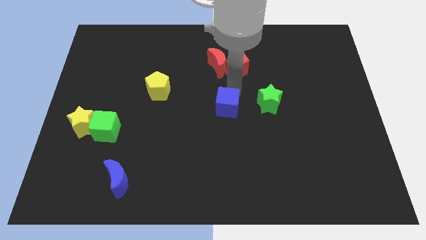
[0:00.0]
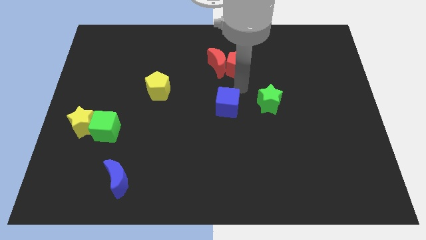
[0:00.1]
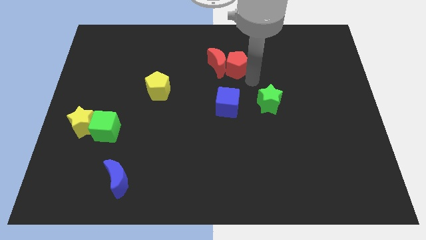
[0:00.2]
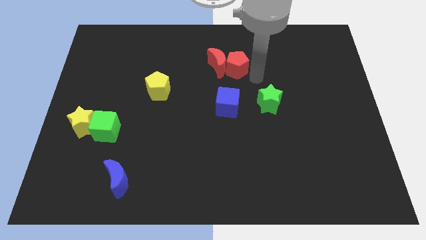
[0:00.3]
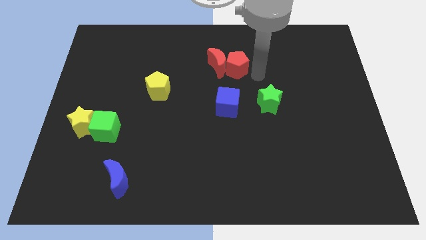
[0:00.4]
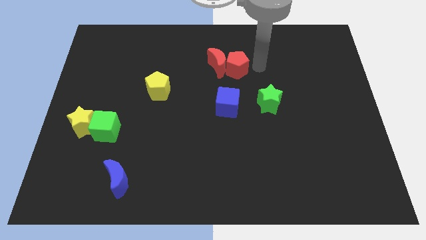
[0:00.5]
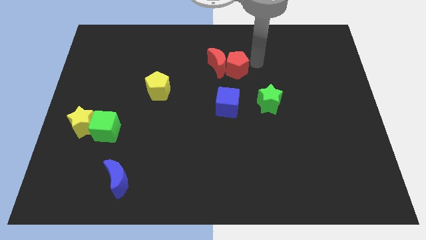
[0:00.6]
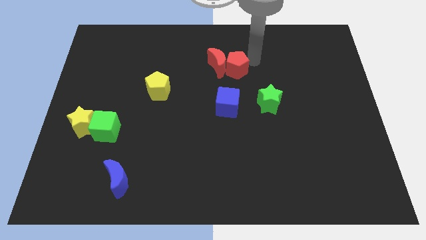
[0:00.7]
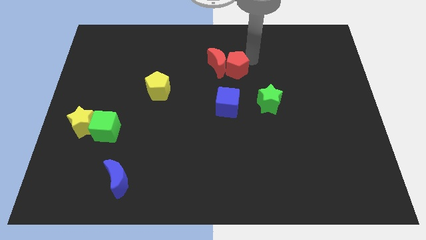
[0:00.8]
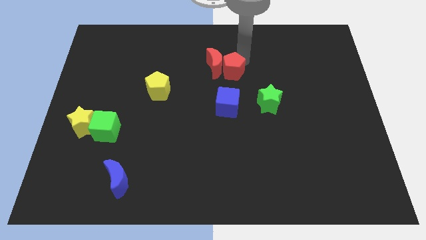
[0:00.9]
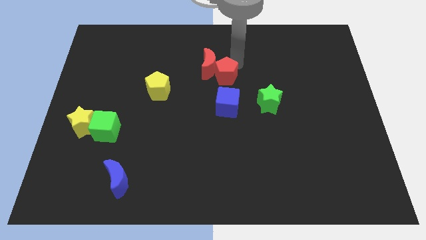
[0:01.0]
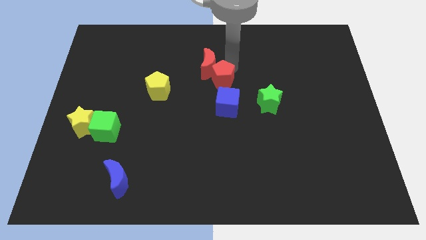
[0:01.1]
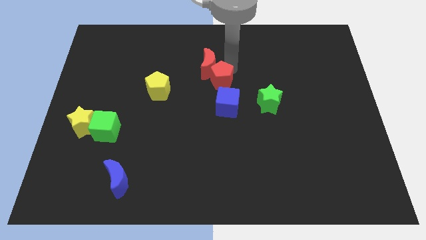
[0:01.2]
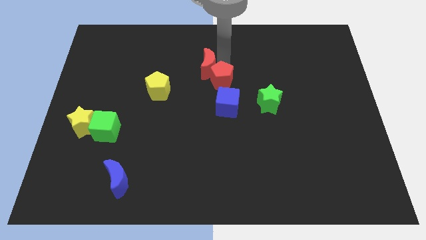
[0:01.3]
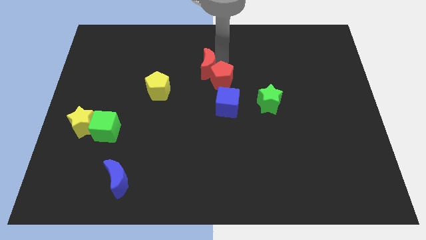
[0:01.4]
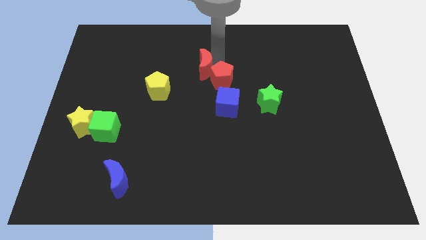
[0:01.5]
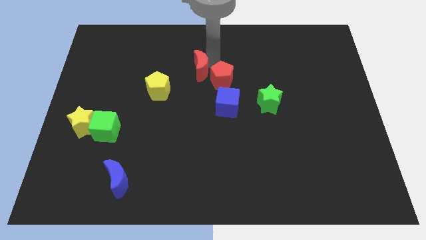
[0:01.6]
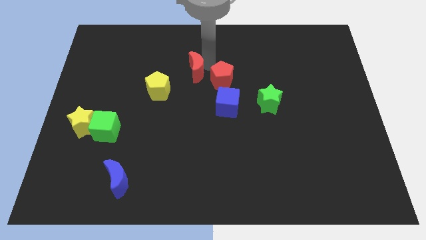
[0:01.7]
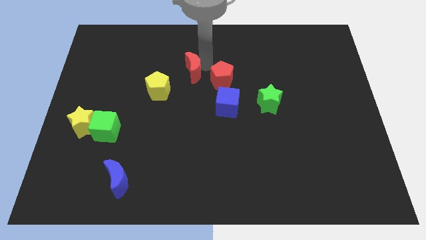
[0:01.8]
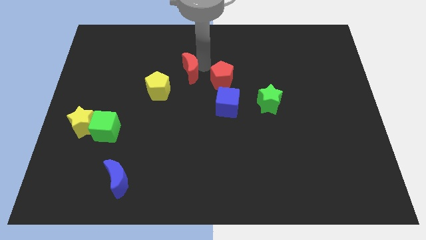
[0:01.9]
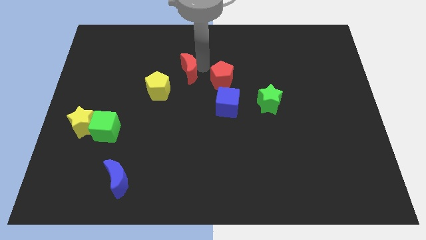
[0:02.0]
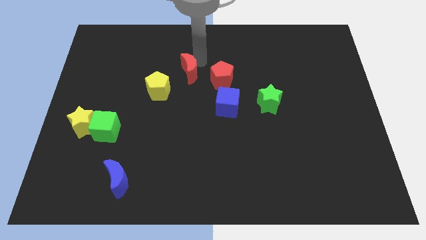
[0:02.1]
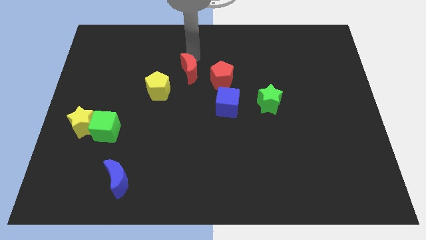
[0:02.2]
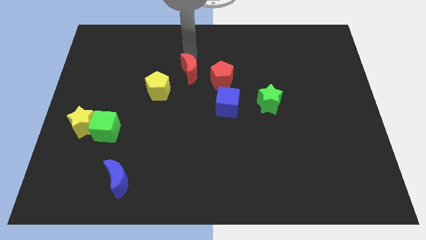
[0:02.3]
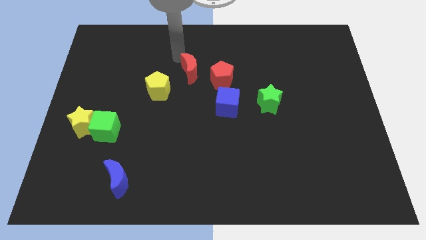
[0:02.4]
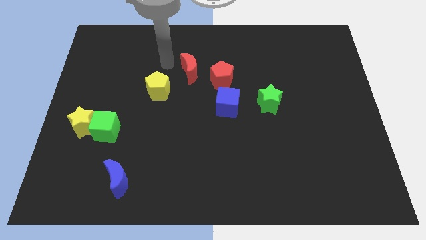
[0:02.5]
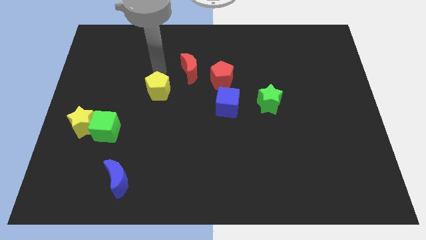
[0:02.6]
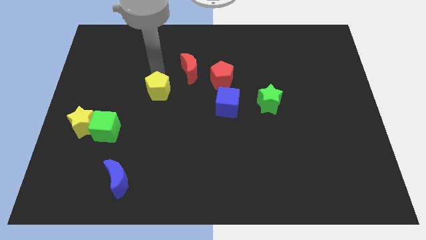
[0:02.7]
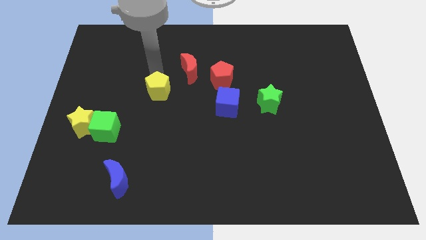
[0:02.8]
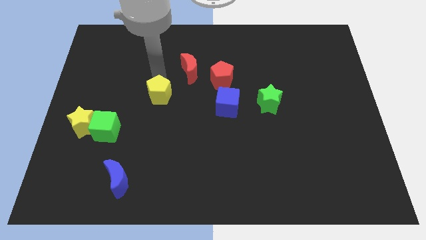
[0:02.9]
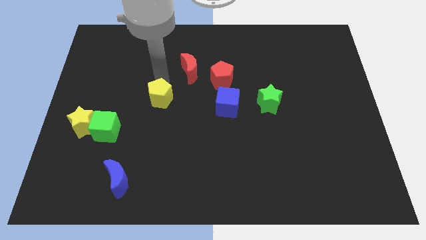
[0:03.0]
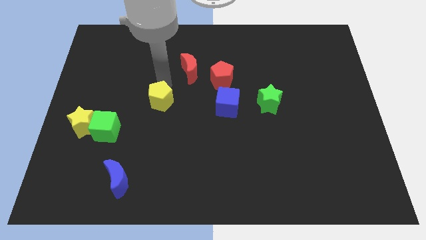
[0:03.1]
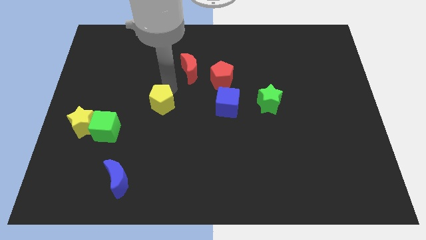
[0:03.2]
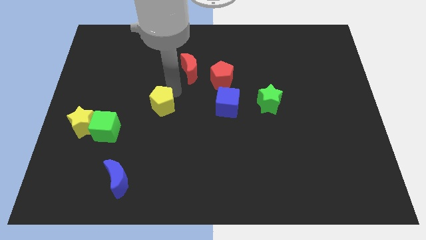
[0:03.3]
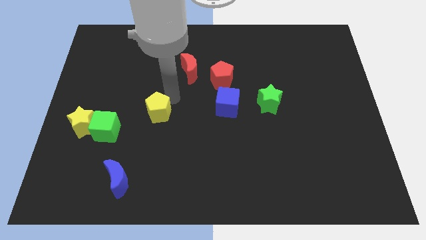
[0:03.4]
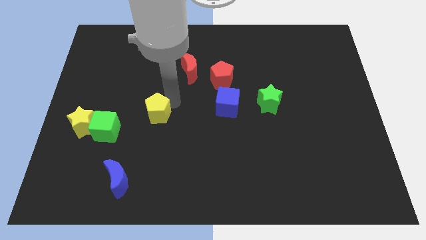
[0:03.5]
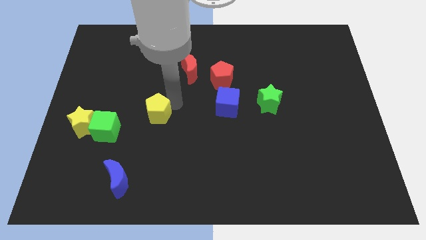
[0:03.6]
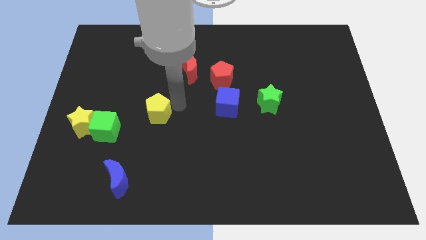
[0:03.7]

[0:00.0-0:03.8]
move yellow pentagon downwards

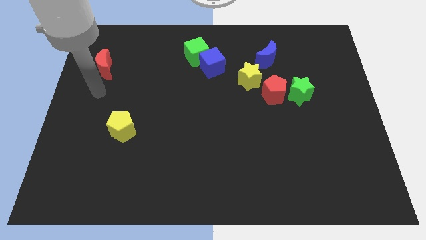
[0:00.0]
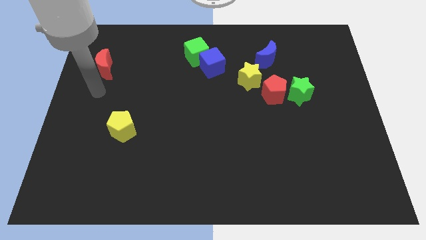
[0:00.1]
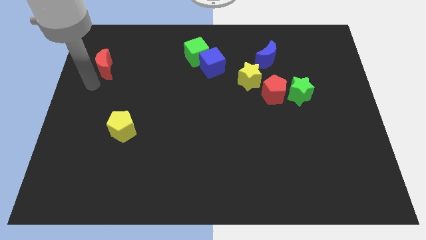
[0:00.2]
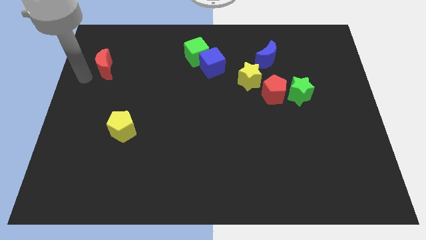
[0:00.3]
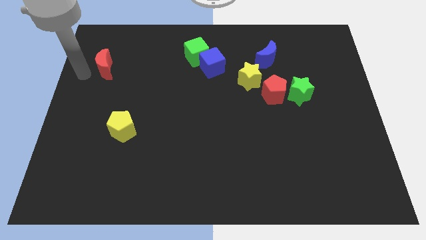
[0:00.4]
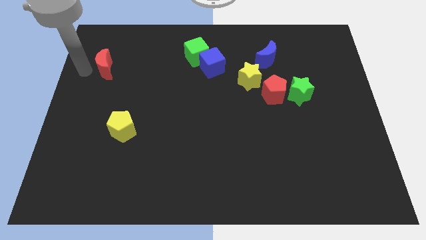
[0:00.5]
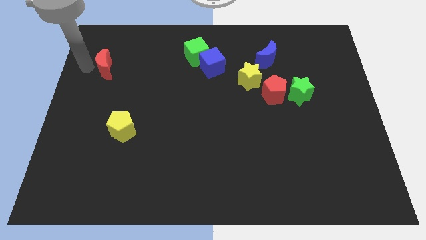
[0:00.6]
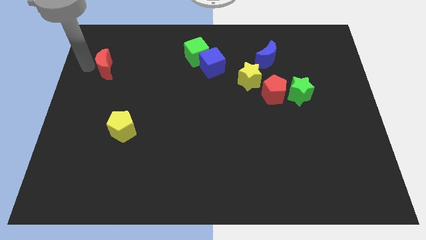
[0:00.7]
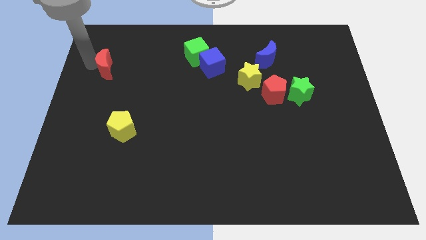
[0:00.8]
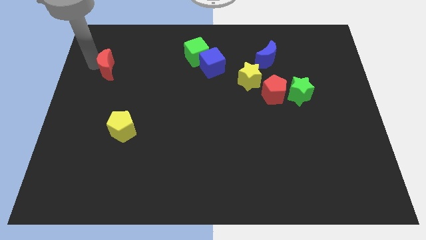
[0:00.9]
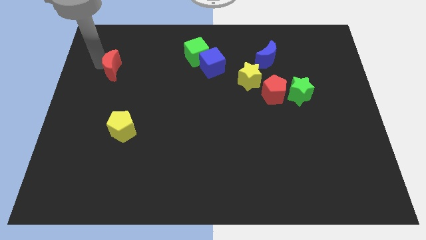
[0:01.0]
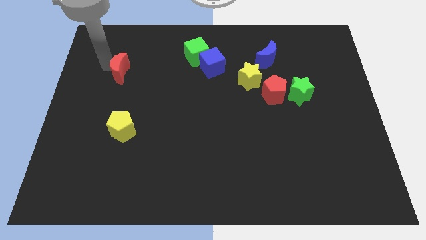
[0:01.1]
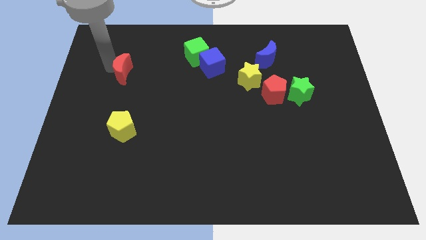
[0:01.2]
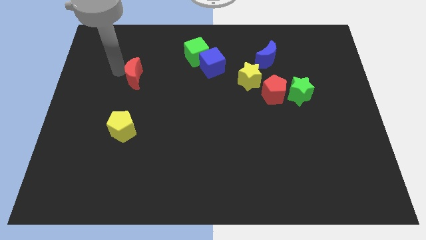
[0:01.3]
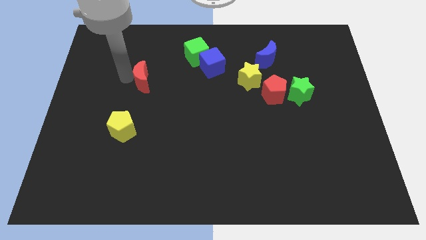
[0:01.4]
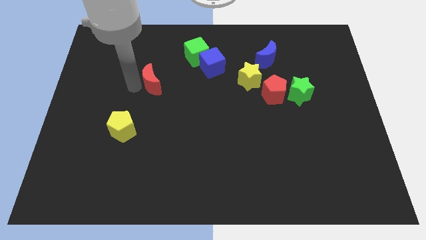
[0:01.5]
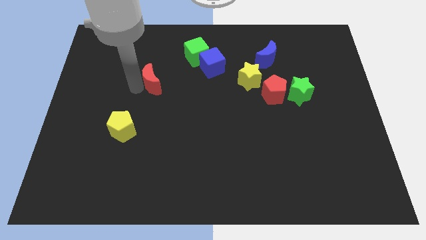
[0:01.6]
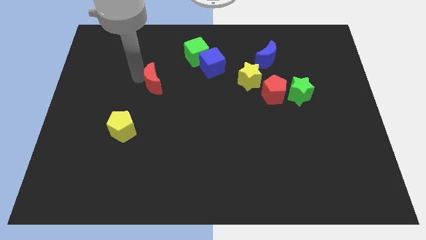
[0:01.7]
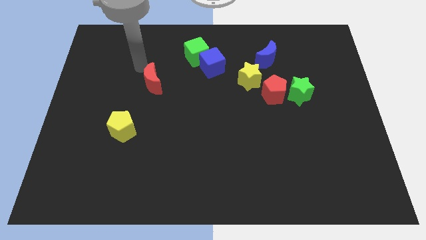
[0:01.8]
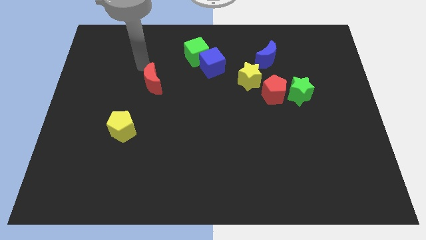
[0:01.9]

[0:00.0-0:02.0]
move the red crescent towards the blue cube

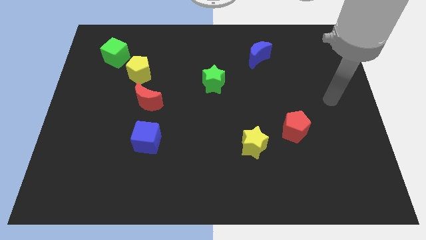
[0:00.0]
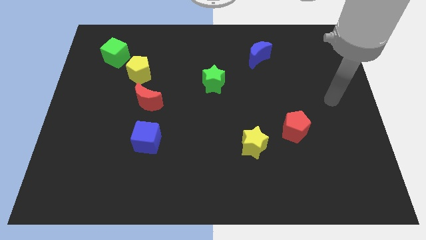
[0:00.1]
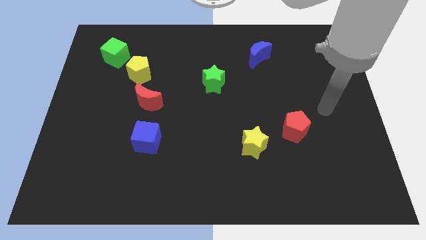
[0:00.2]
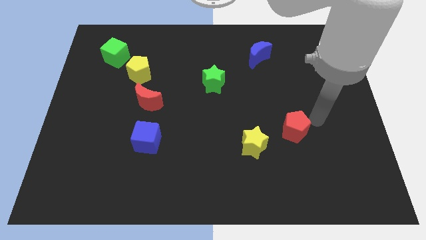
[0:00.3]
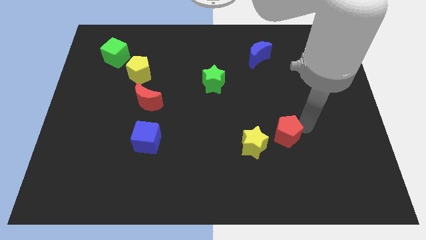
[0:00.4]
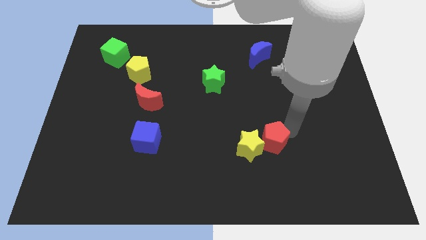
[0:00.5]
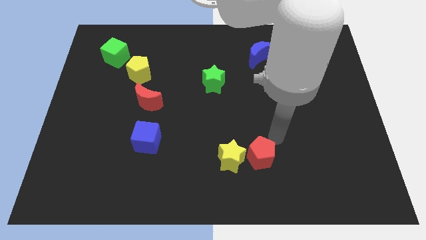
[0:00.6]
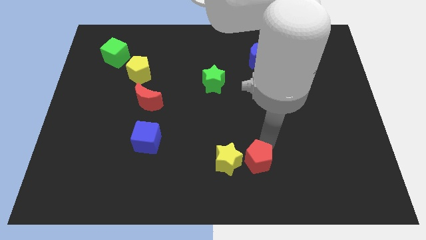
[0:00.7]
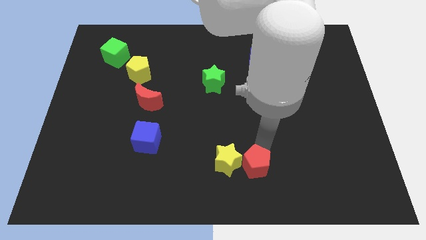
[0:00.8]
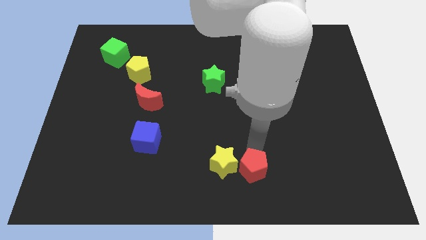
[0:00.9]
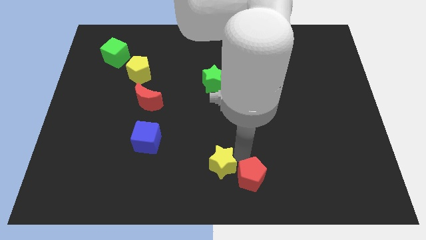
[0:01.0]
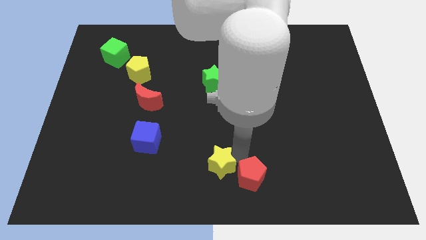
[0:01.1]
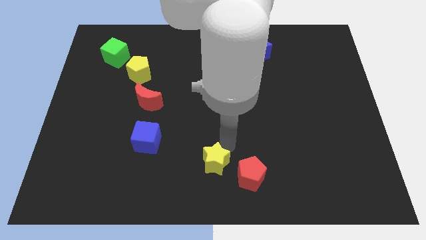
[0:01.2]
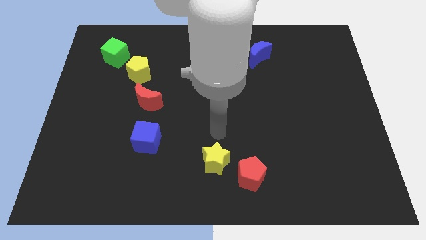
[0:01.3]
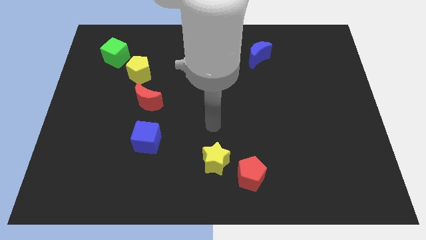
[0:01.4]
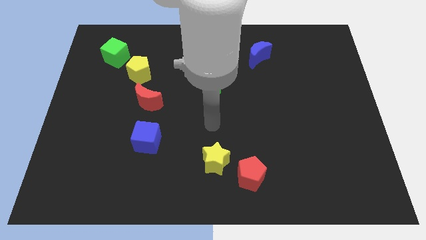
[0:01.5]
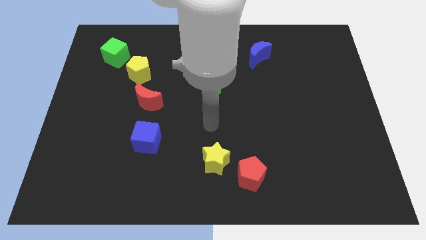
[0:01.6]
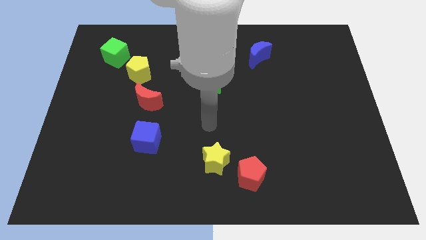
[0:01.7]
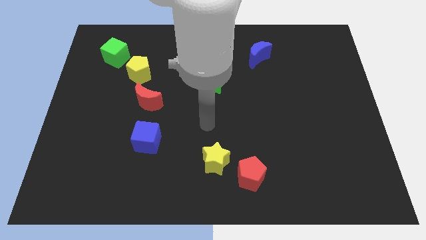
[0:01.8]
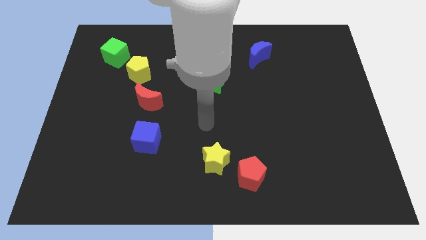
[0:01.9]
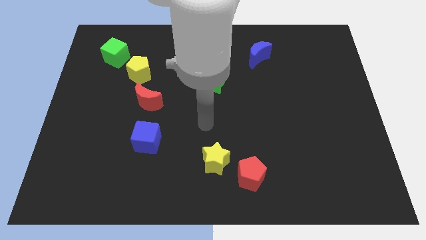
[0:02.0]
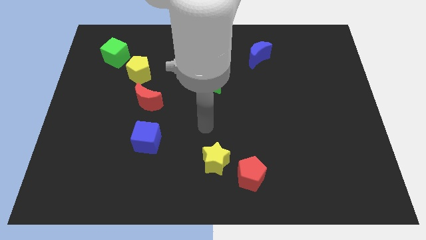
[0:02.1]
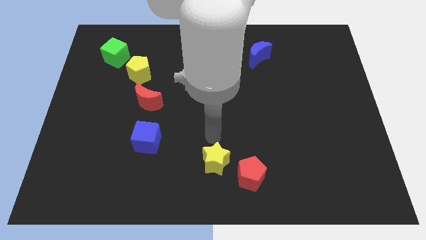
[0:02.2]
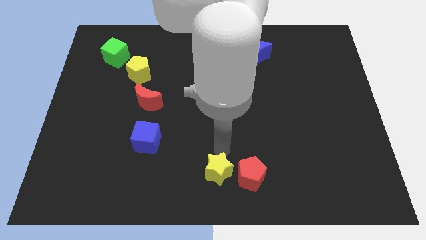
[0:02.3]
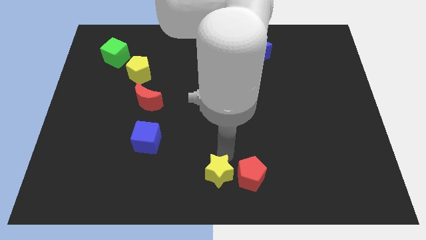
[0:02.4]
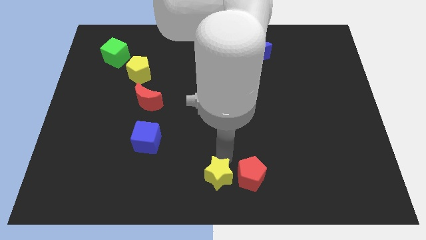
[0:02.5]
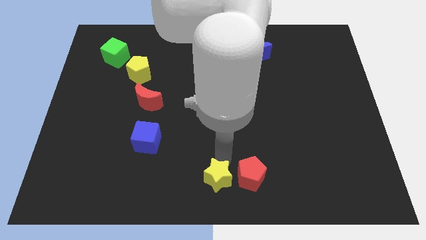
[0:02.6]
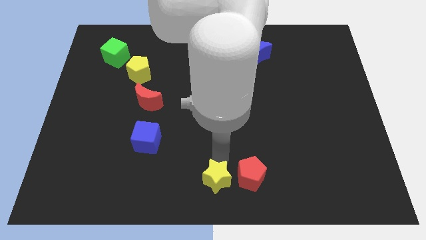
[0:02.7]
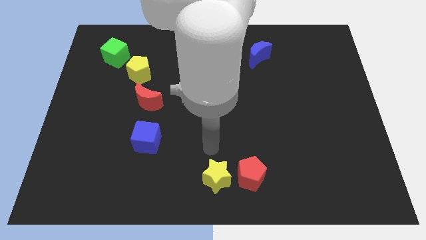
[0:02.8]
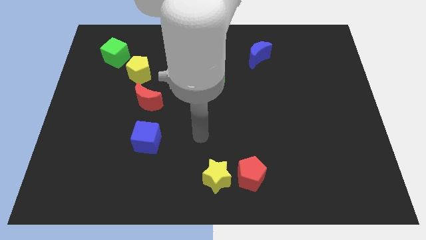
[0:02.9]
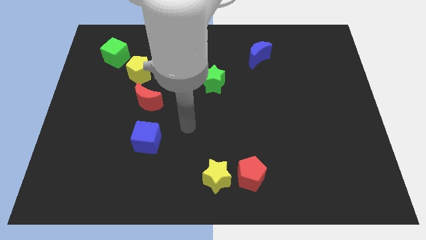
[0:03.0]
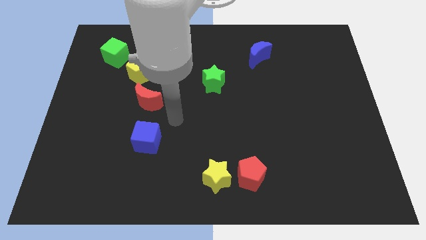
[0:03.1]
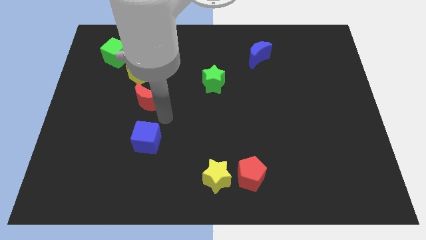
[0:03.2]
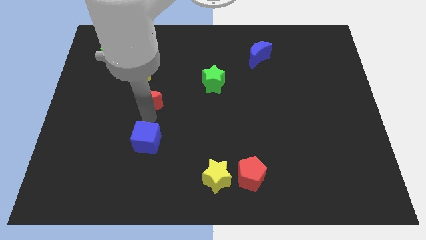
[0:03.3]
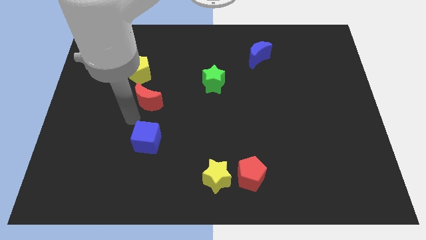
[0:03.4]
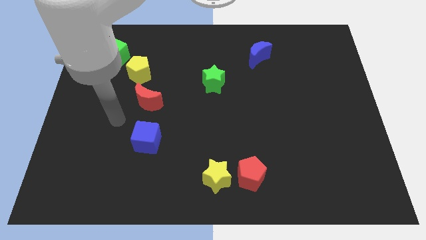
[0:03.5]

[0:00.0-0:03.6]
push the red pentagon and the yellow star towards the bottom center of the board
